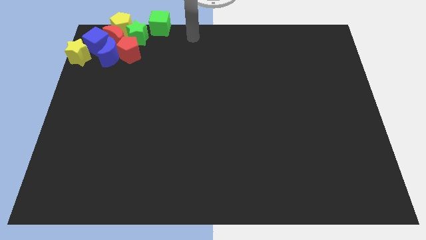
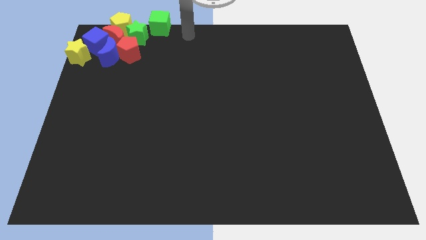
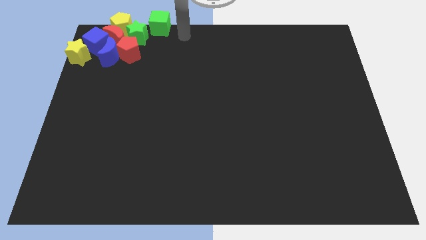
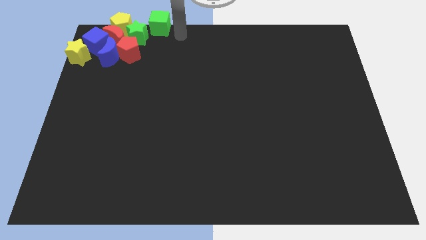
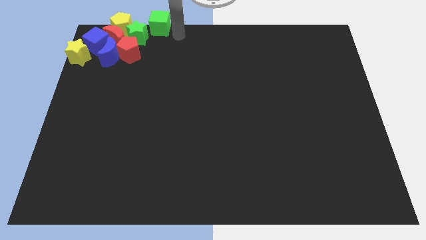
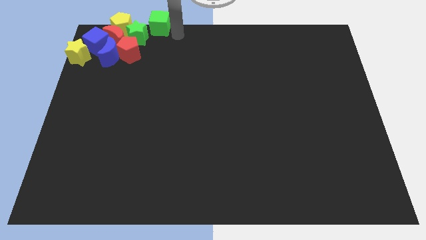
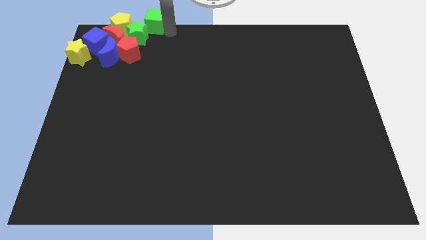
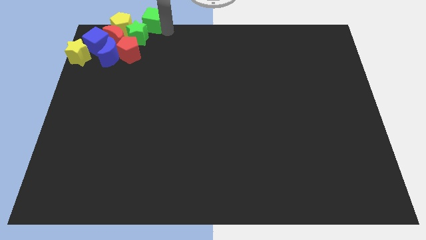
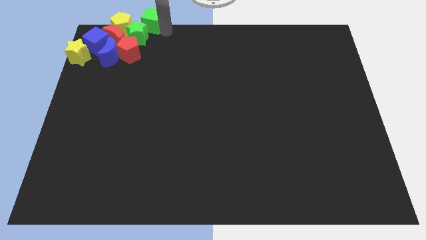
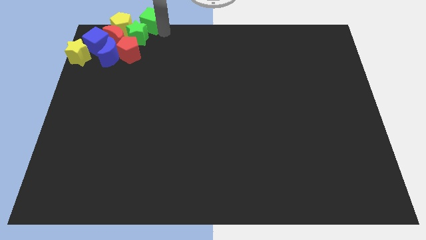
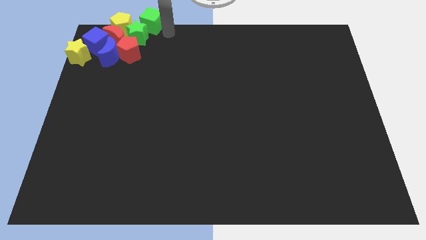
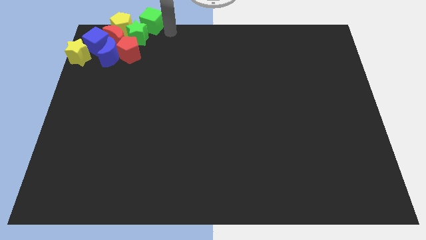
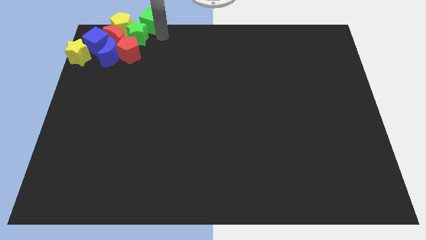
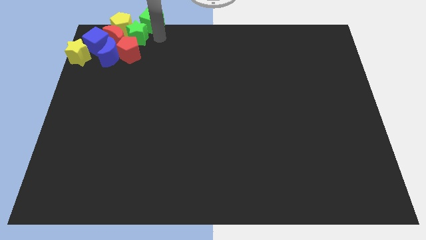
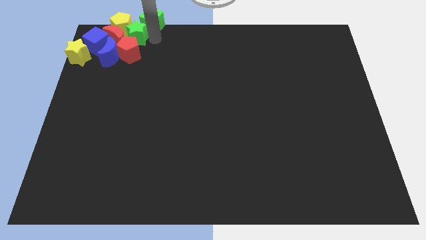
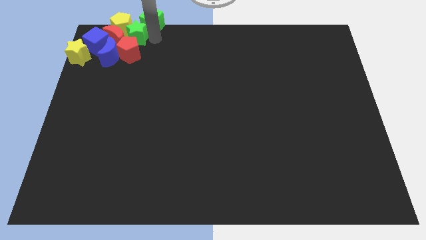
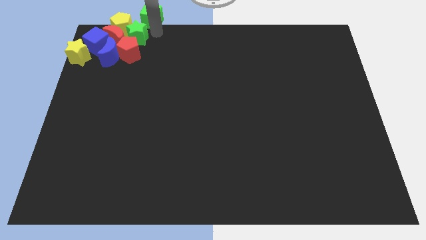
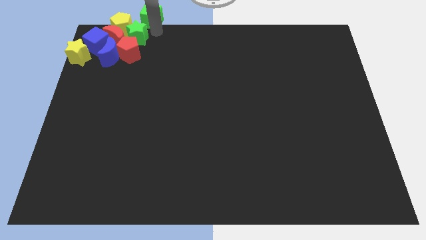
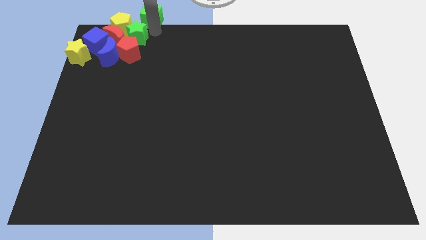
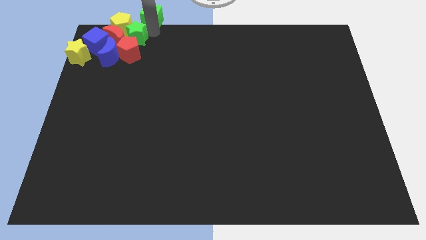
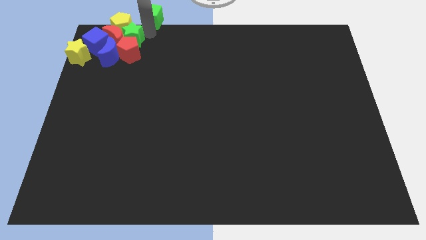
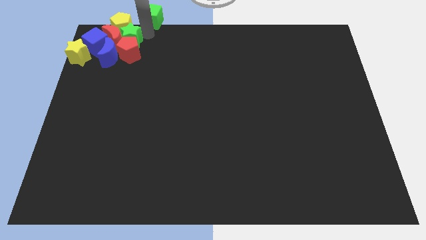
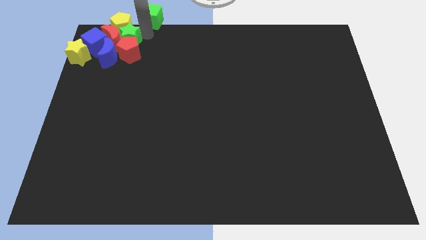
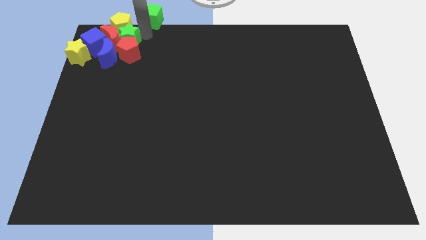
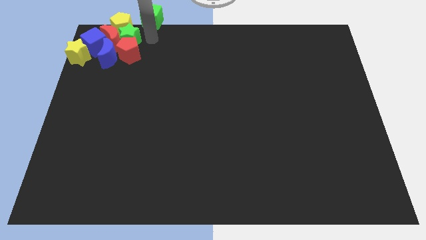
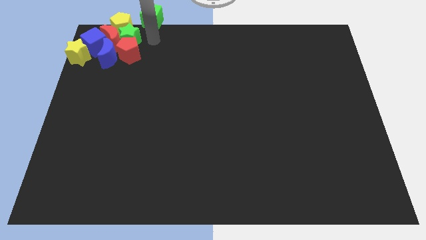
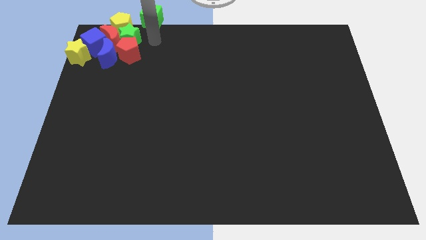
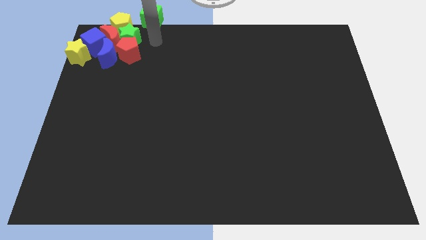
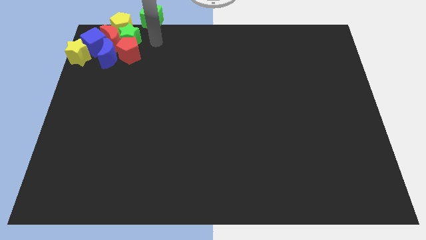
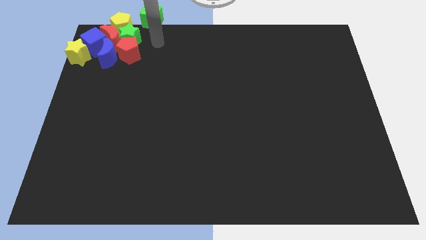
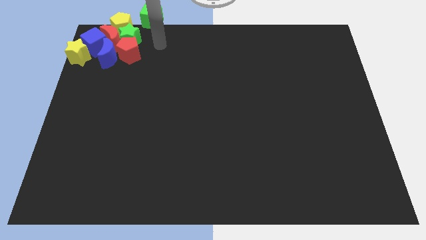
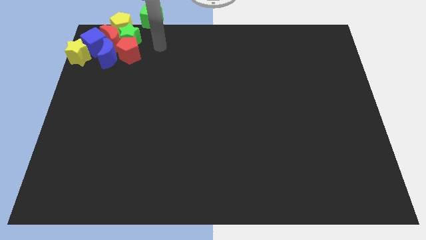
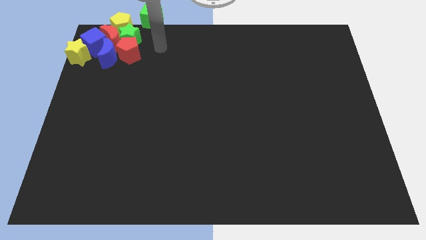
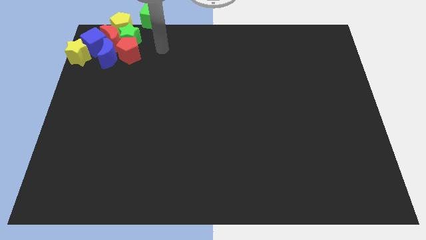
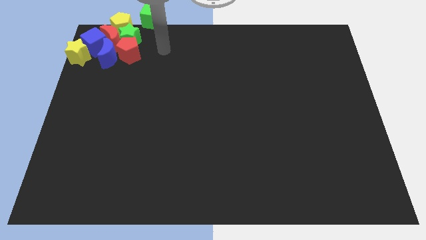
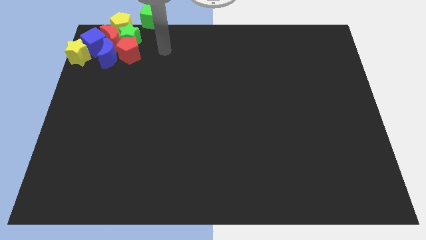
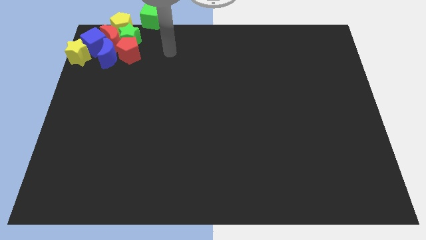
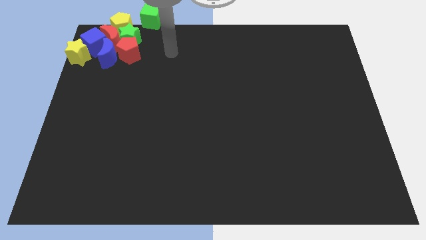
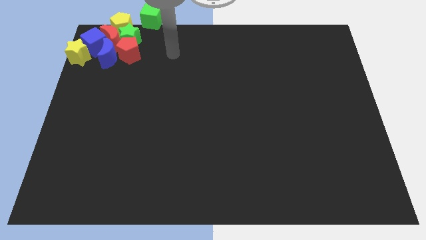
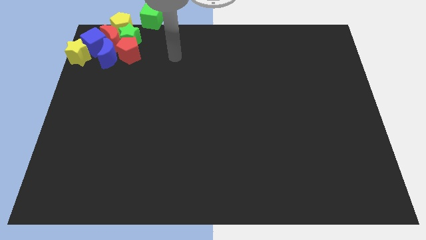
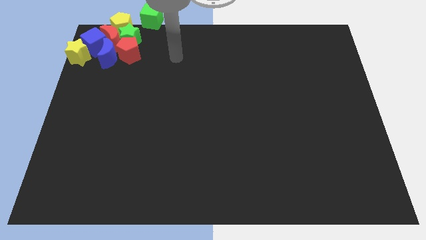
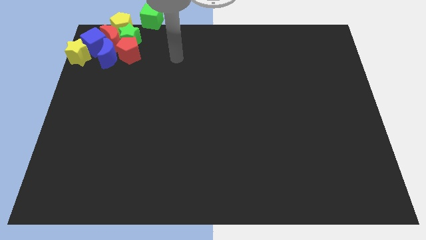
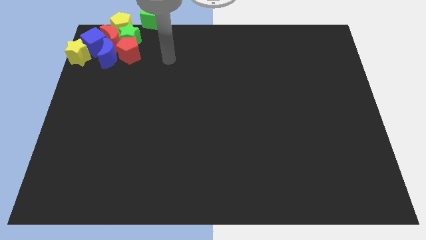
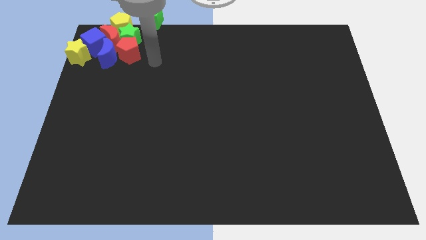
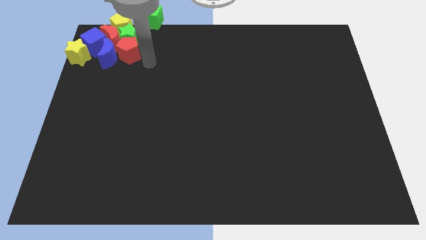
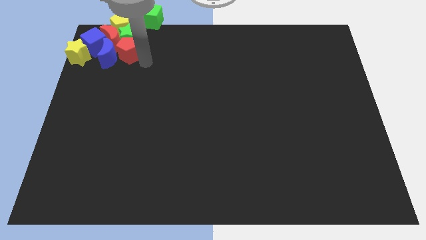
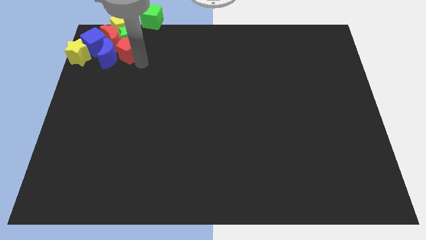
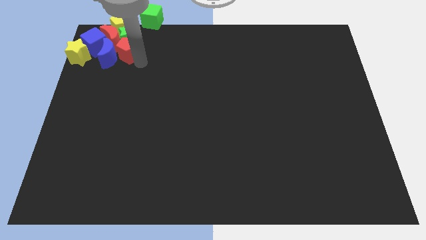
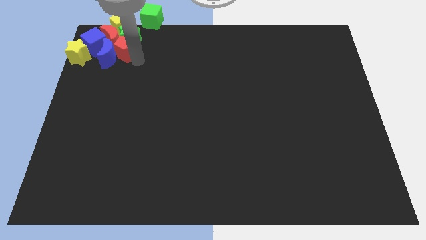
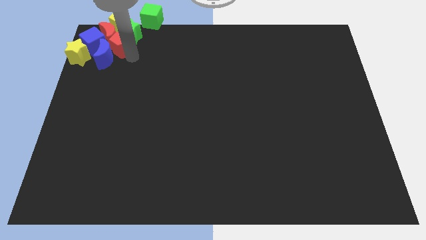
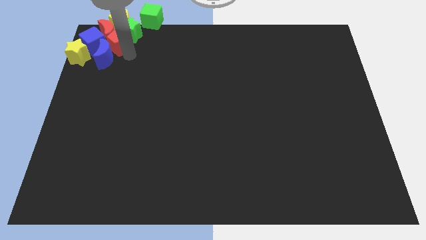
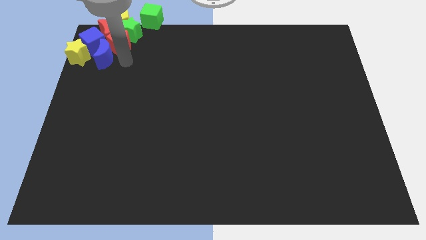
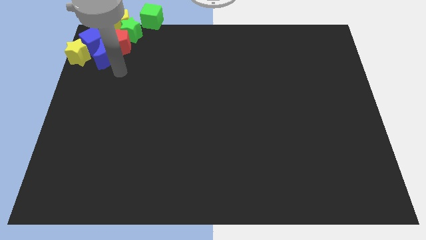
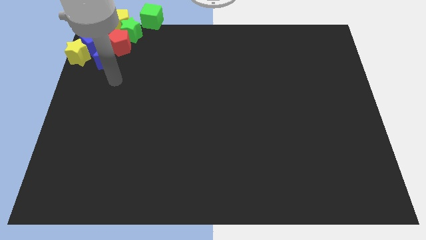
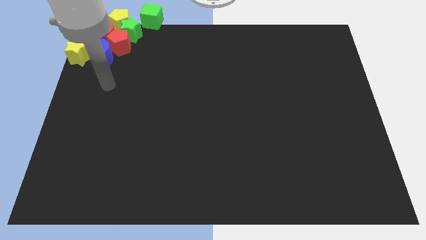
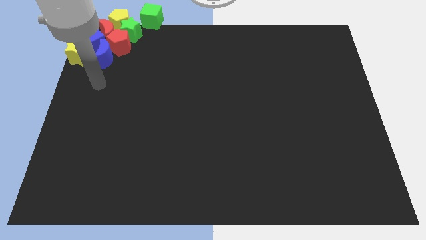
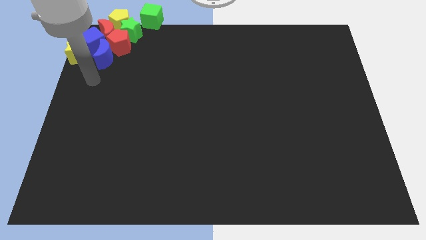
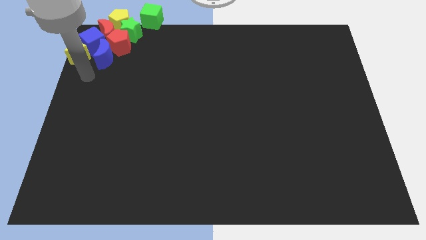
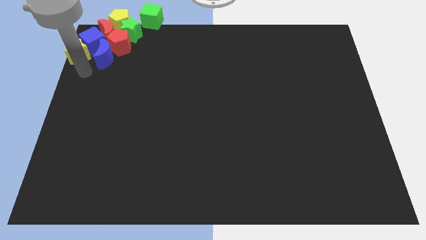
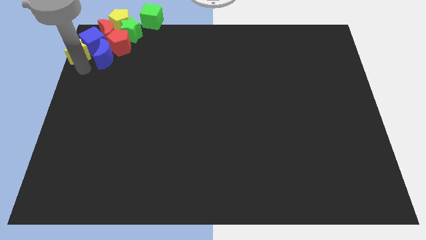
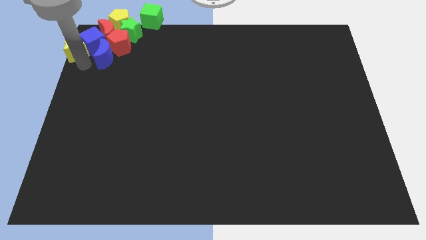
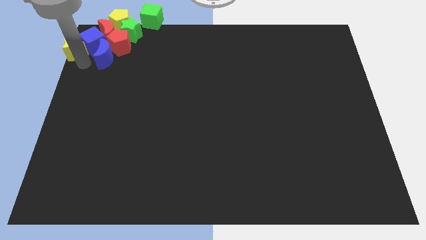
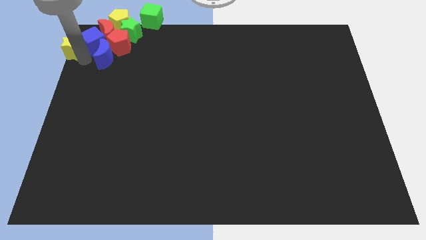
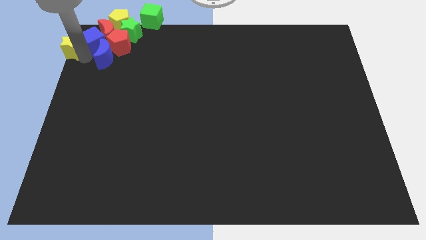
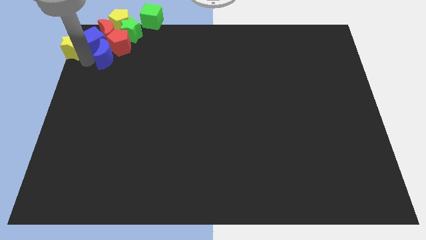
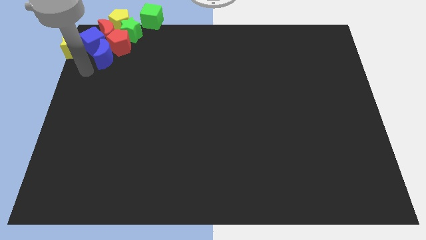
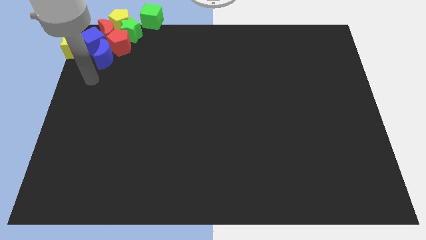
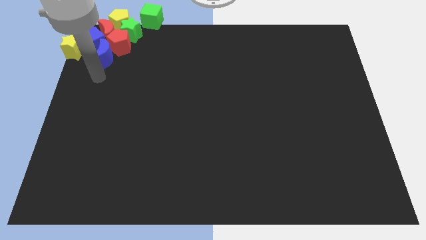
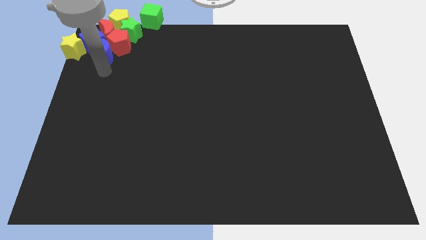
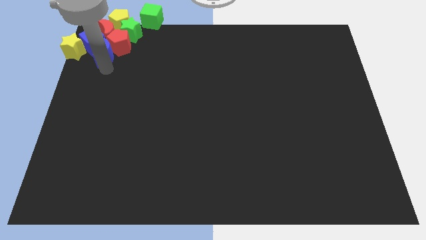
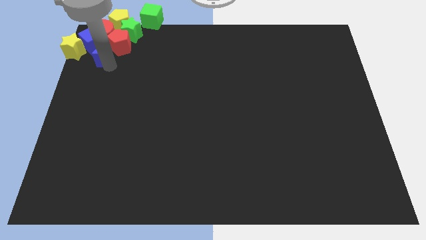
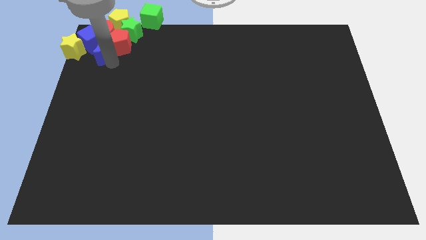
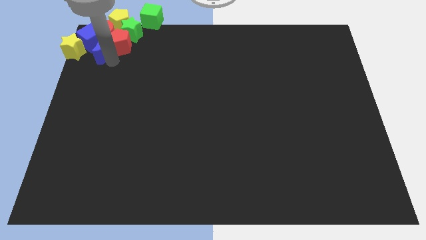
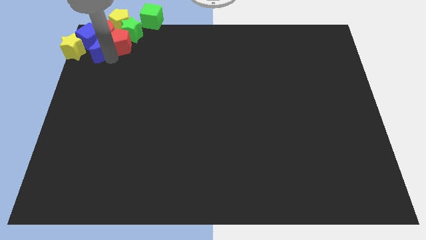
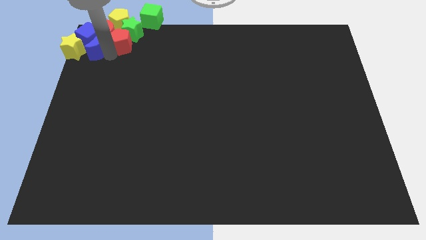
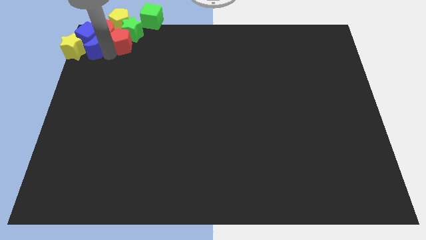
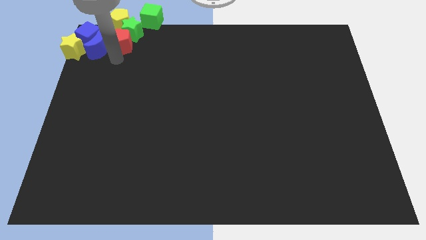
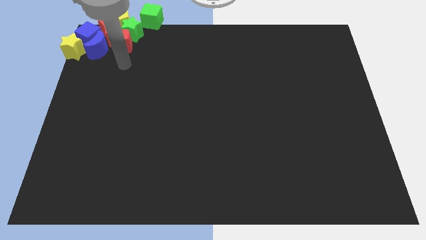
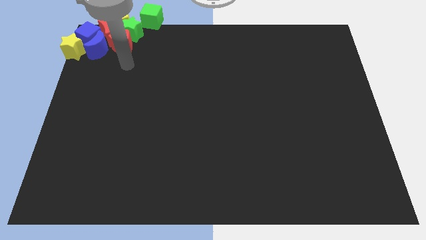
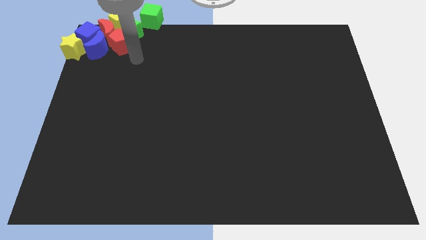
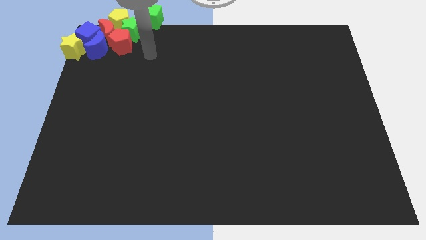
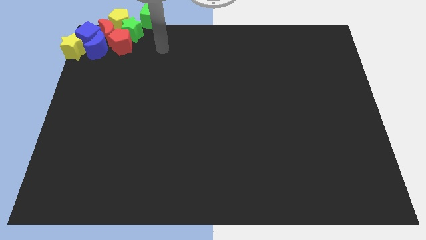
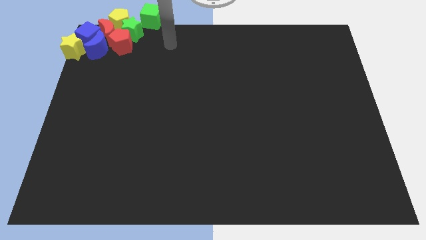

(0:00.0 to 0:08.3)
move the group of blocks towards the top left corner of the board

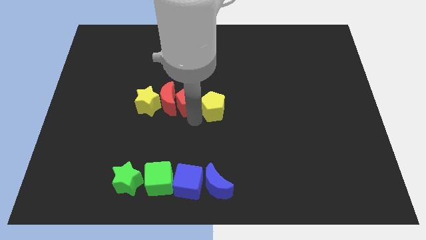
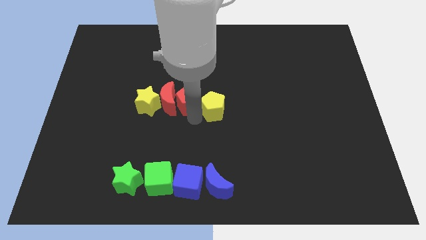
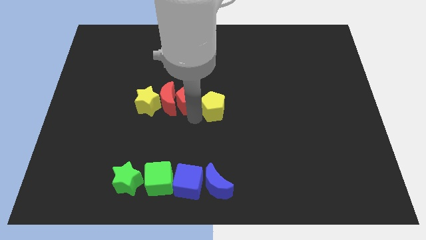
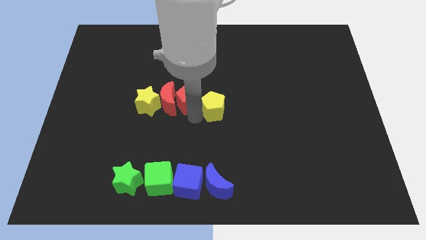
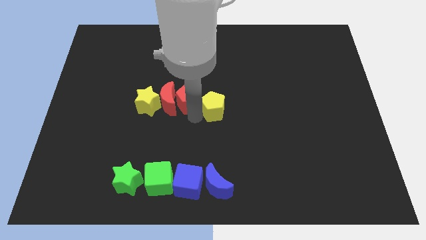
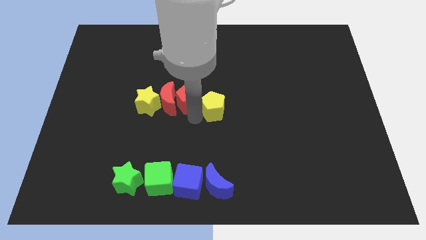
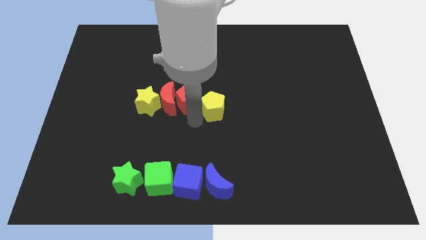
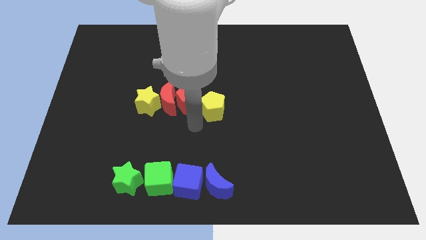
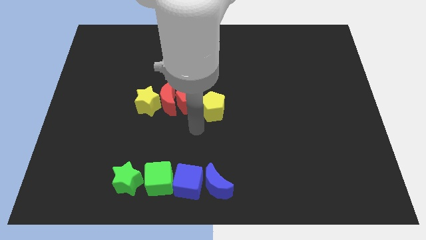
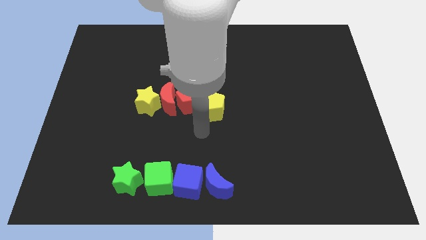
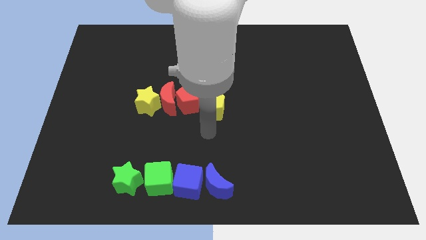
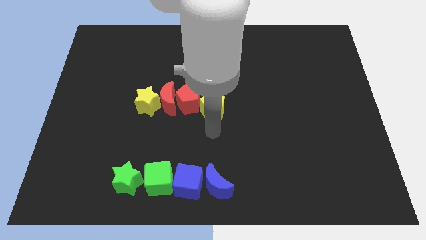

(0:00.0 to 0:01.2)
push the red pentagon upward
